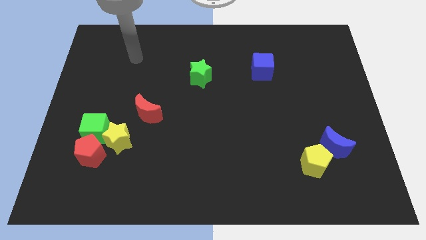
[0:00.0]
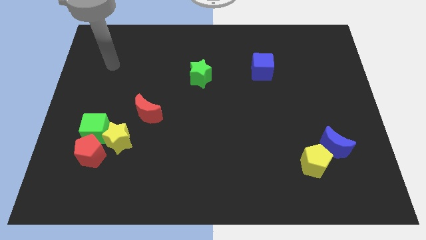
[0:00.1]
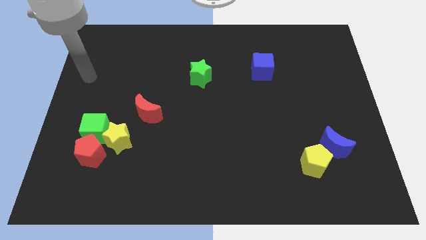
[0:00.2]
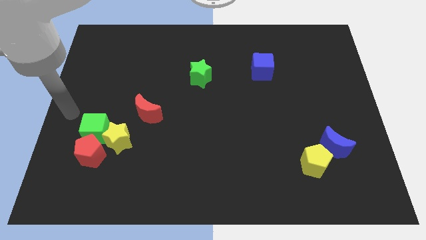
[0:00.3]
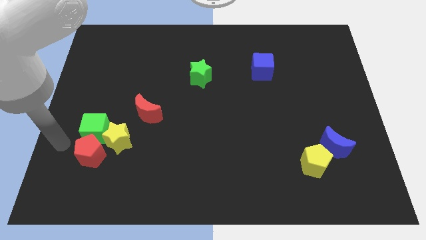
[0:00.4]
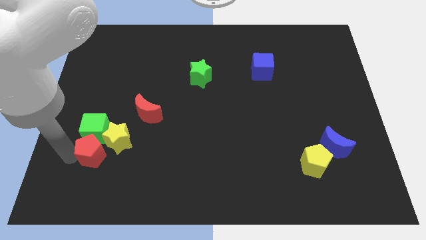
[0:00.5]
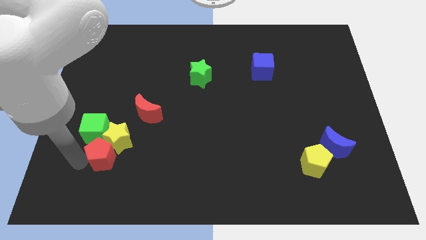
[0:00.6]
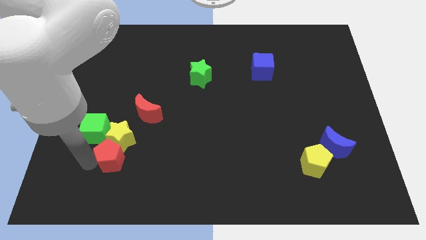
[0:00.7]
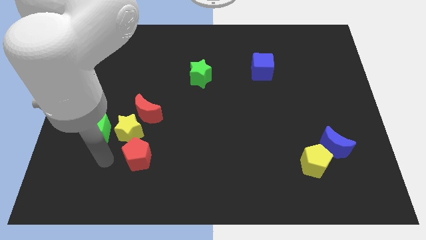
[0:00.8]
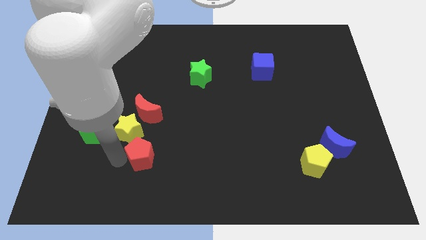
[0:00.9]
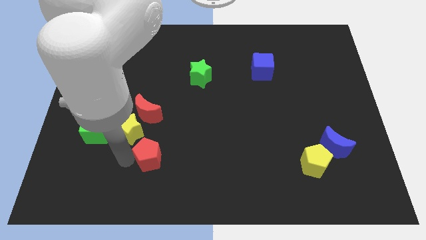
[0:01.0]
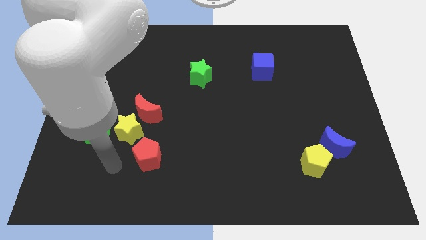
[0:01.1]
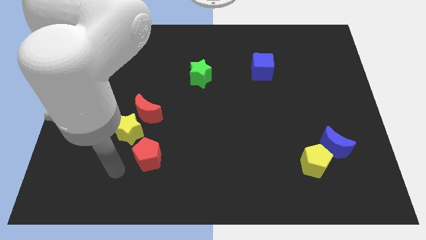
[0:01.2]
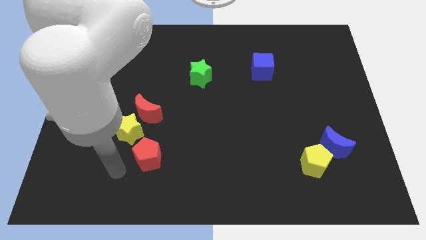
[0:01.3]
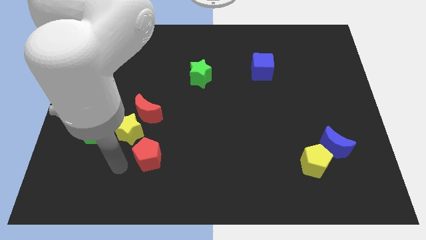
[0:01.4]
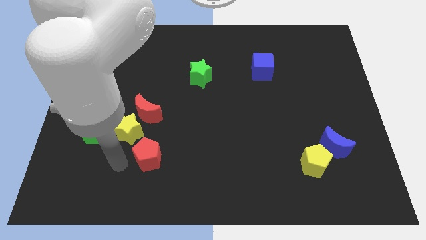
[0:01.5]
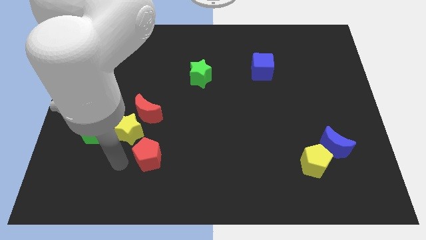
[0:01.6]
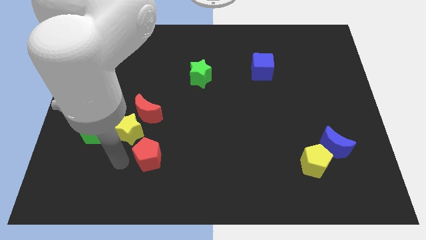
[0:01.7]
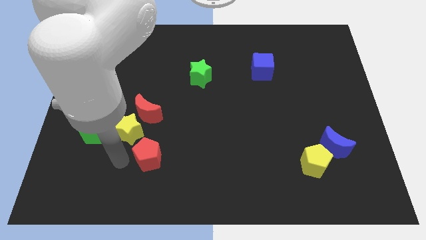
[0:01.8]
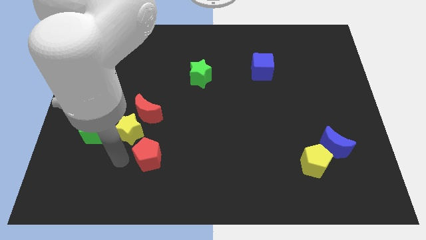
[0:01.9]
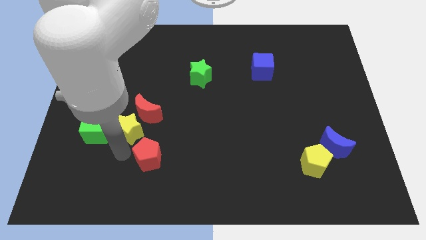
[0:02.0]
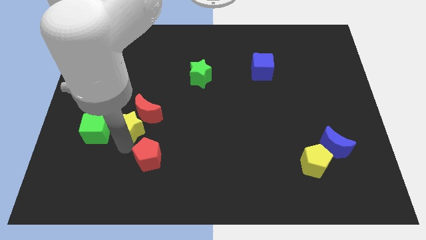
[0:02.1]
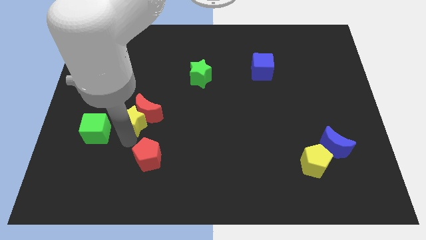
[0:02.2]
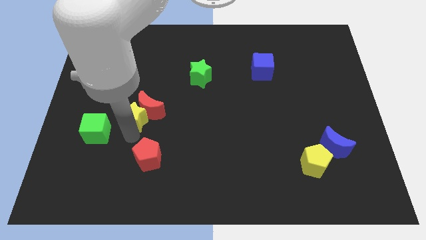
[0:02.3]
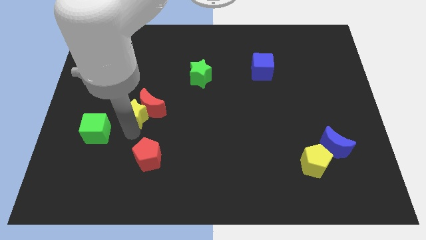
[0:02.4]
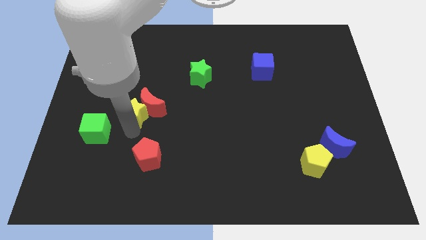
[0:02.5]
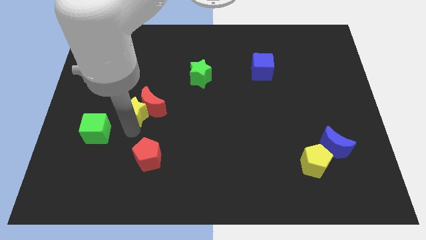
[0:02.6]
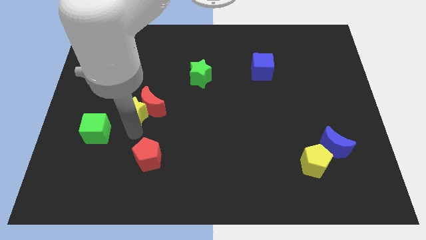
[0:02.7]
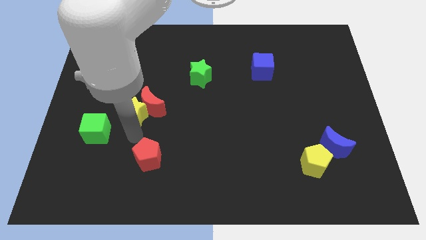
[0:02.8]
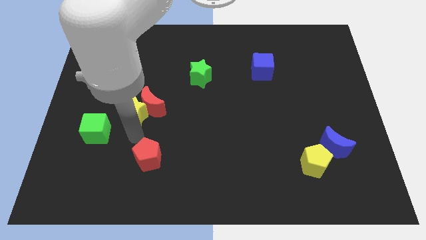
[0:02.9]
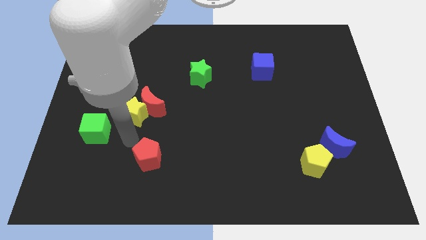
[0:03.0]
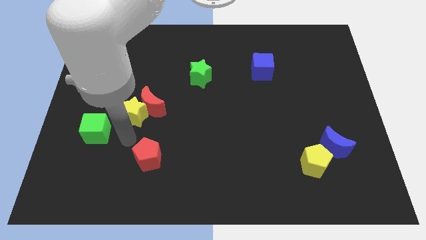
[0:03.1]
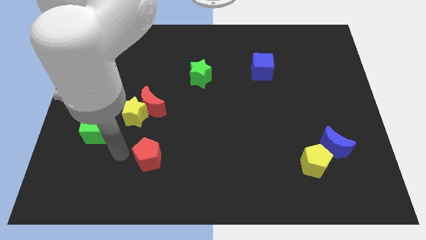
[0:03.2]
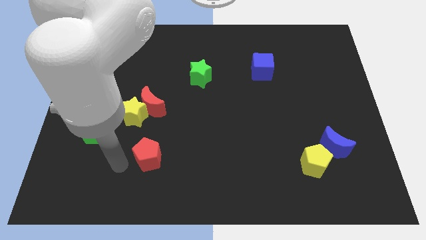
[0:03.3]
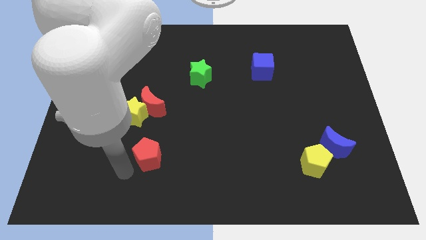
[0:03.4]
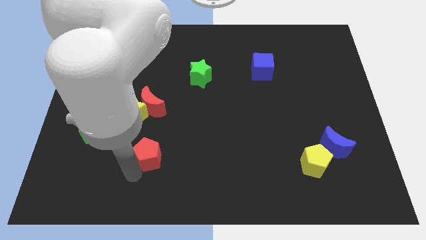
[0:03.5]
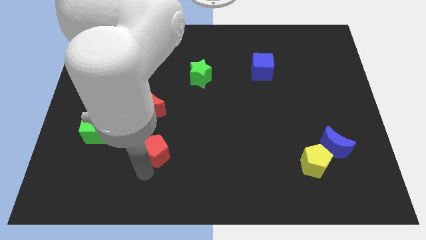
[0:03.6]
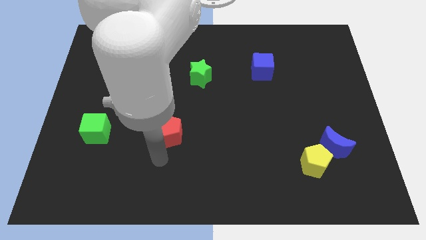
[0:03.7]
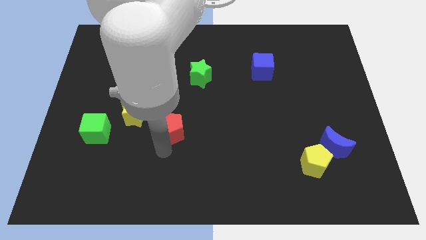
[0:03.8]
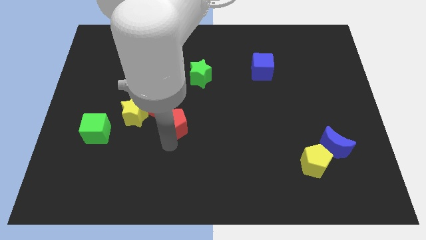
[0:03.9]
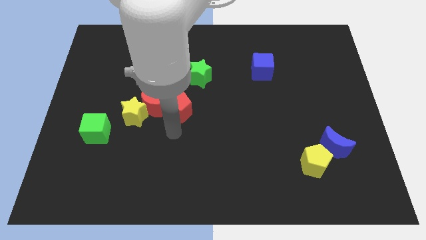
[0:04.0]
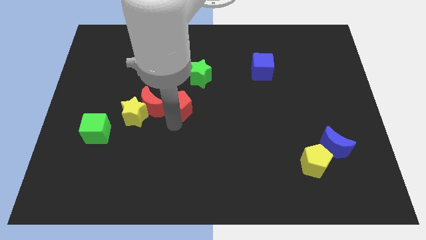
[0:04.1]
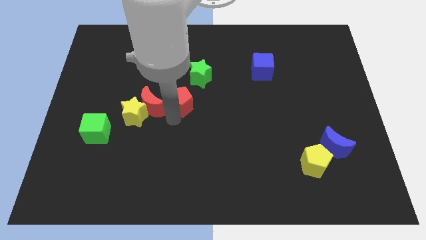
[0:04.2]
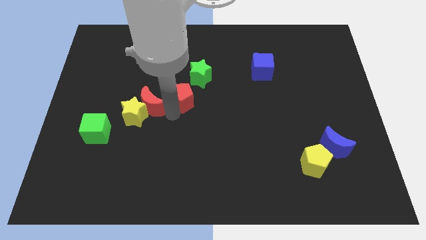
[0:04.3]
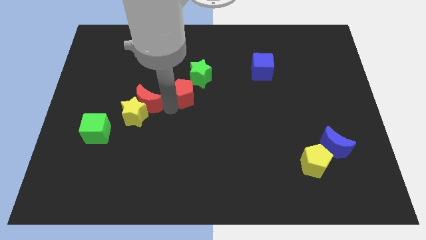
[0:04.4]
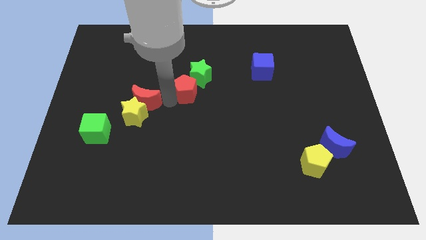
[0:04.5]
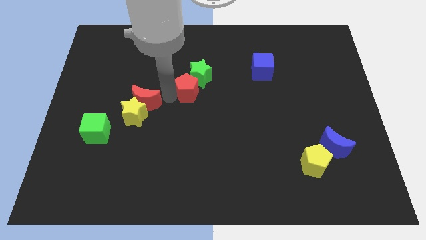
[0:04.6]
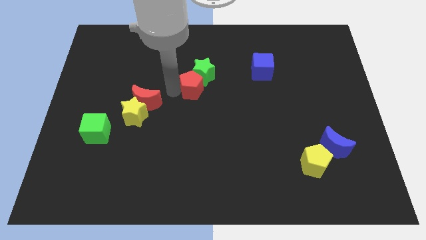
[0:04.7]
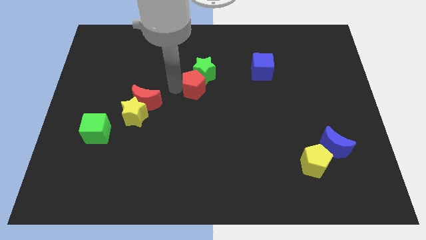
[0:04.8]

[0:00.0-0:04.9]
slide the red pentagon next to the green star

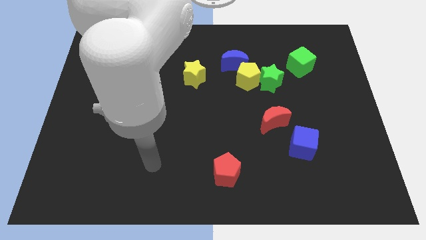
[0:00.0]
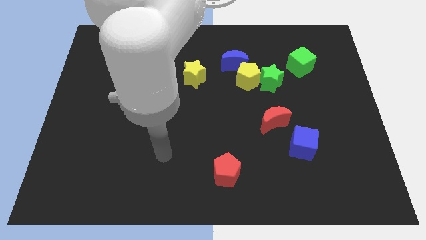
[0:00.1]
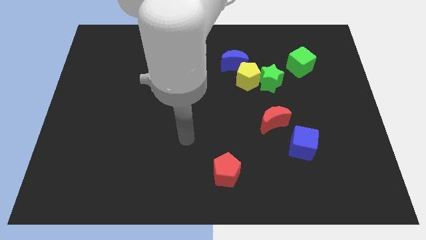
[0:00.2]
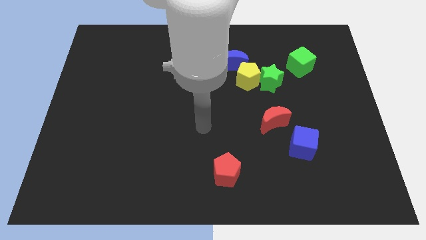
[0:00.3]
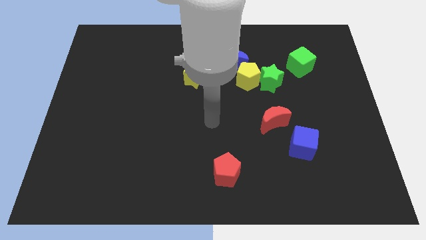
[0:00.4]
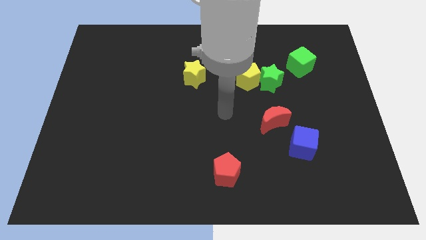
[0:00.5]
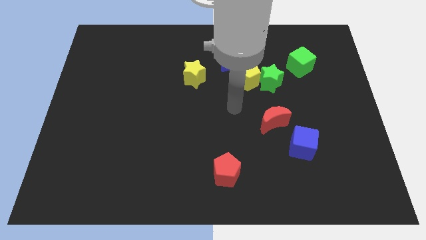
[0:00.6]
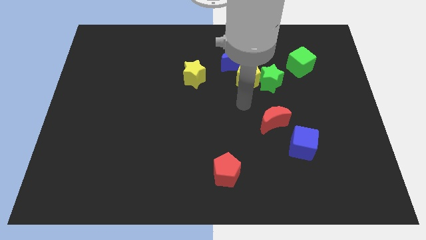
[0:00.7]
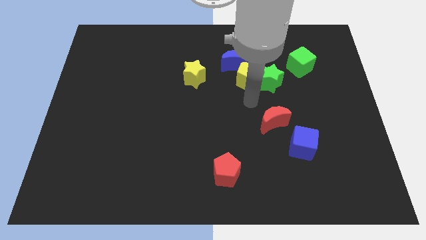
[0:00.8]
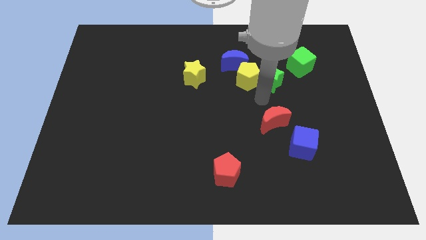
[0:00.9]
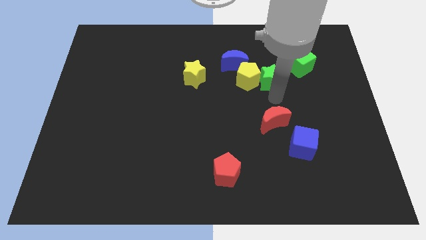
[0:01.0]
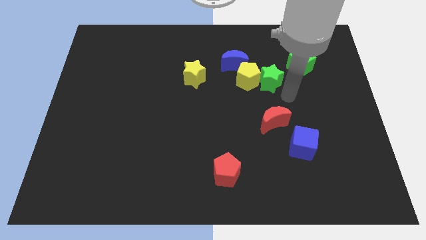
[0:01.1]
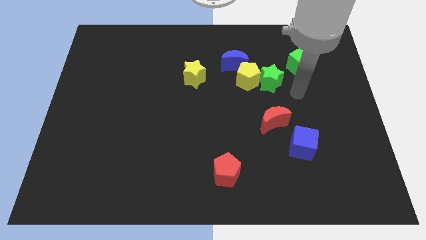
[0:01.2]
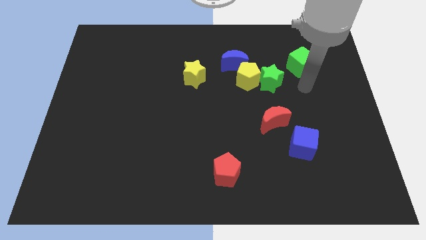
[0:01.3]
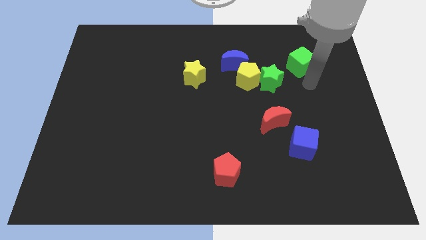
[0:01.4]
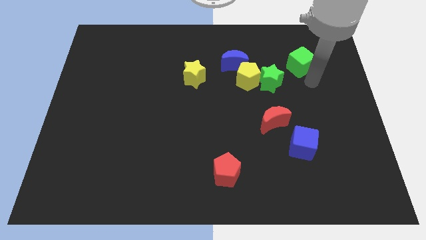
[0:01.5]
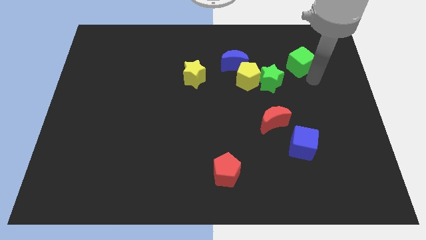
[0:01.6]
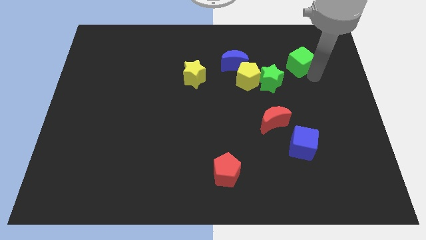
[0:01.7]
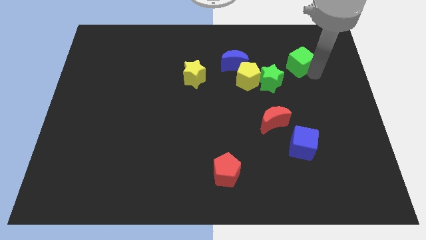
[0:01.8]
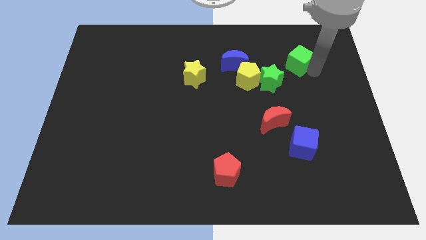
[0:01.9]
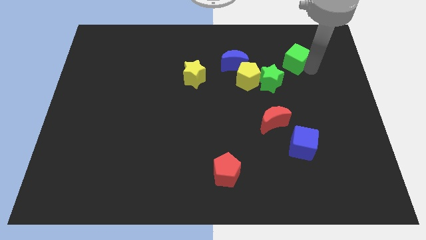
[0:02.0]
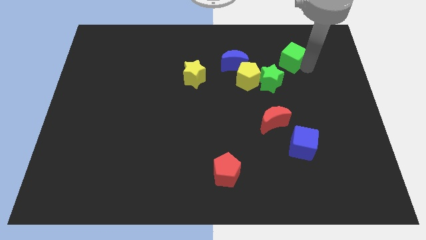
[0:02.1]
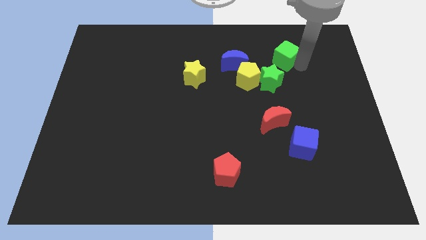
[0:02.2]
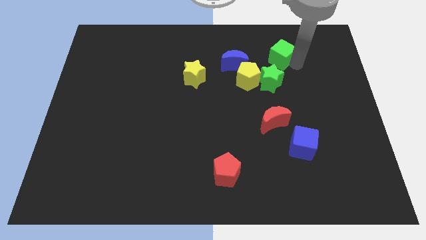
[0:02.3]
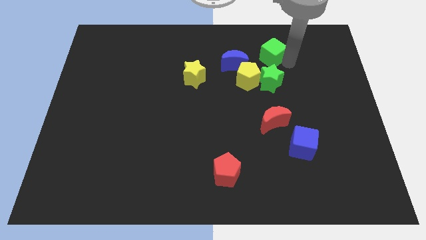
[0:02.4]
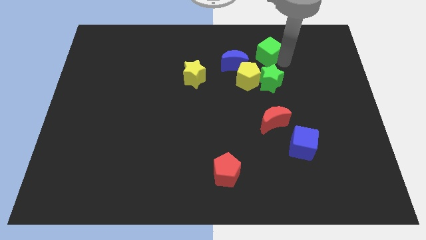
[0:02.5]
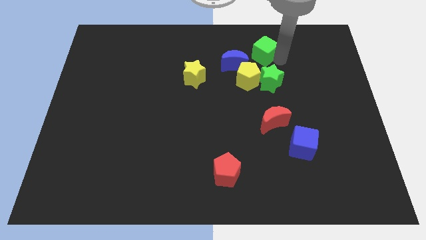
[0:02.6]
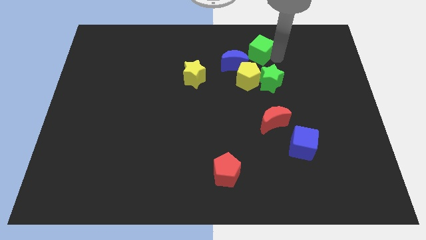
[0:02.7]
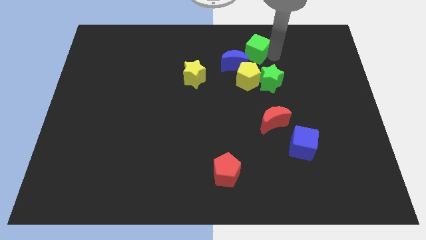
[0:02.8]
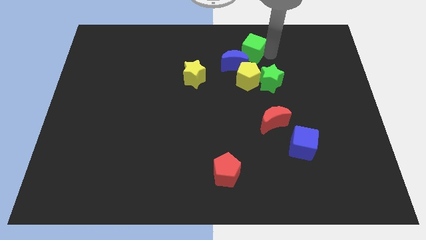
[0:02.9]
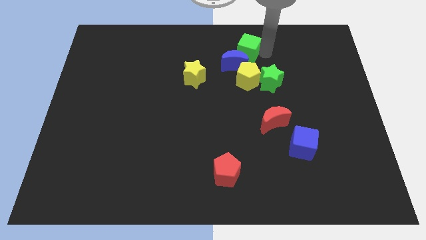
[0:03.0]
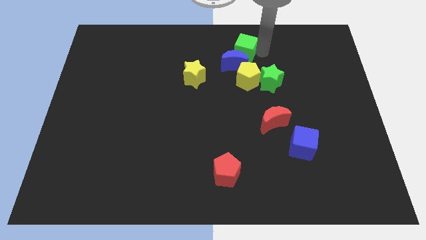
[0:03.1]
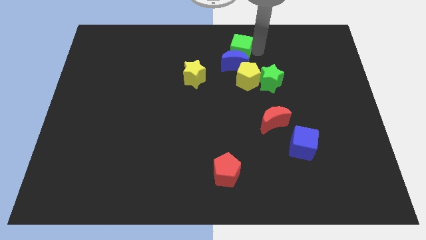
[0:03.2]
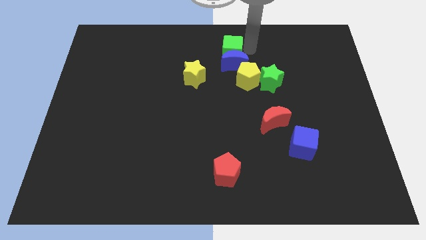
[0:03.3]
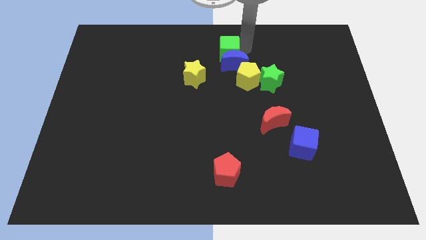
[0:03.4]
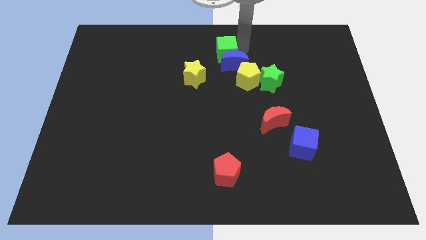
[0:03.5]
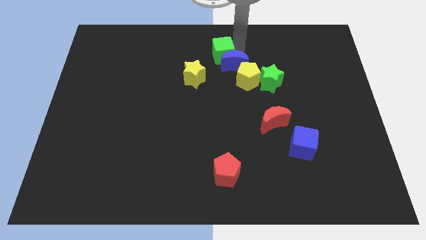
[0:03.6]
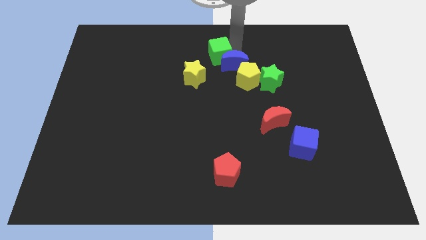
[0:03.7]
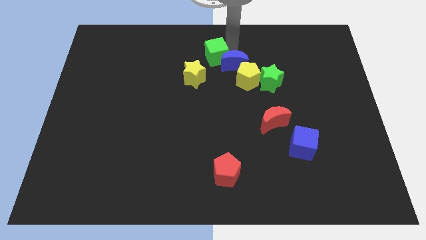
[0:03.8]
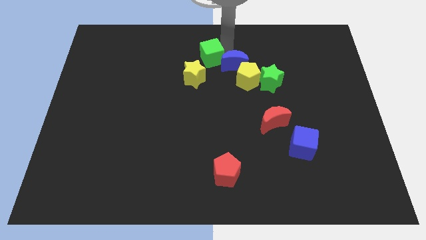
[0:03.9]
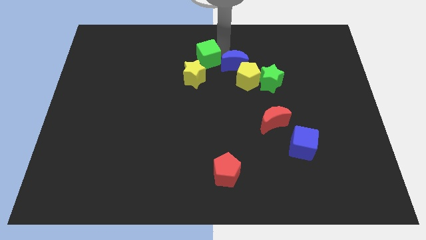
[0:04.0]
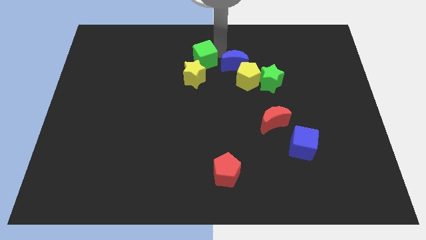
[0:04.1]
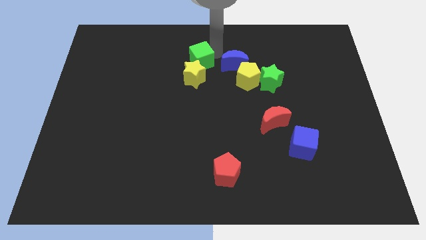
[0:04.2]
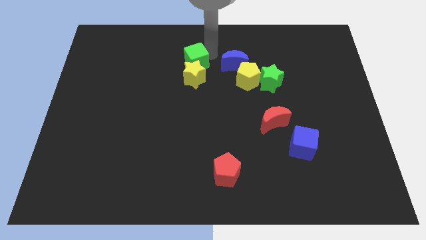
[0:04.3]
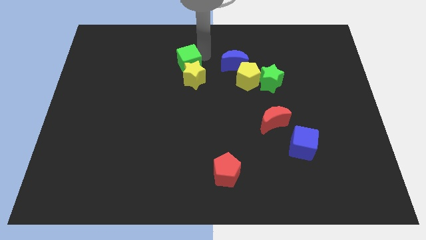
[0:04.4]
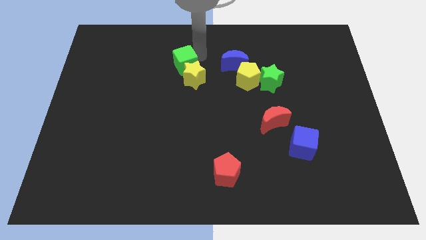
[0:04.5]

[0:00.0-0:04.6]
move the green cube to the yellow star
